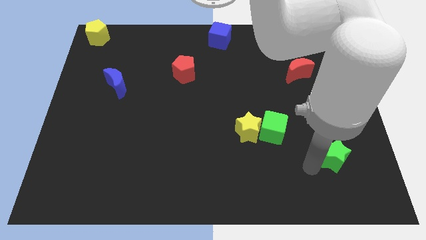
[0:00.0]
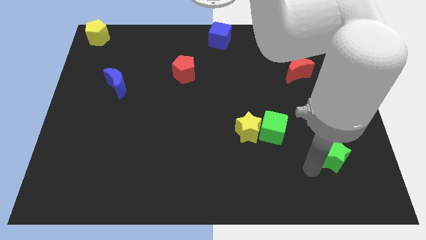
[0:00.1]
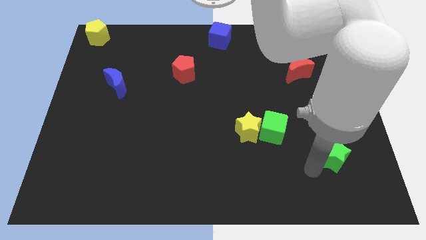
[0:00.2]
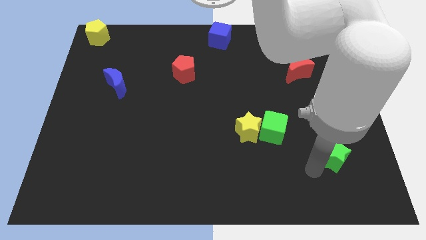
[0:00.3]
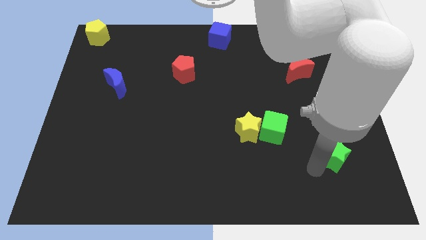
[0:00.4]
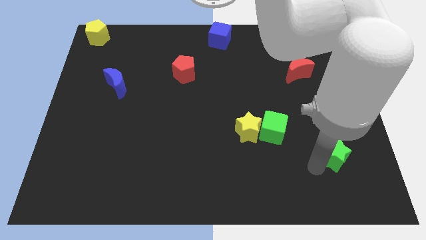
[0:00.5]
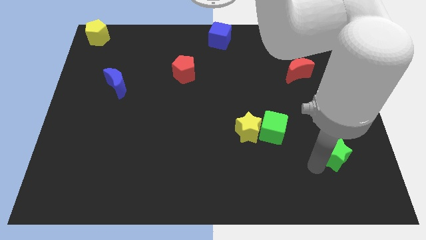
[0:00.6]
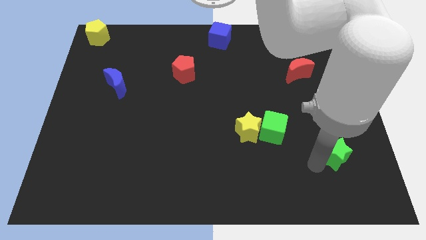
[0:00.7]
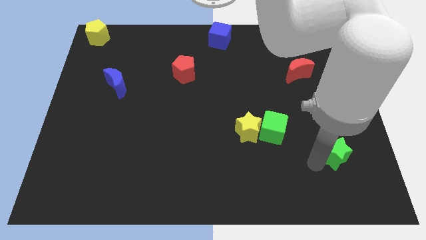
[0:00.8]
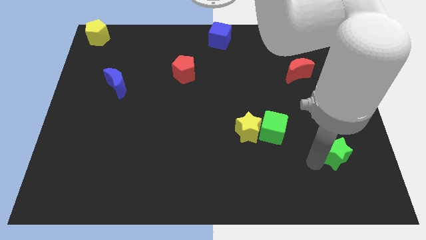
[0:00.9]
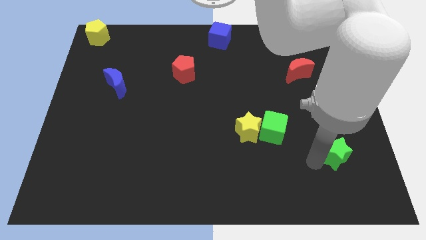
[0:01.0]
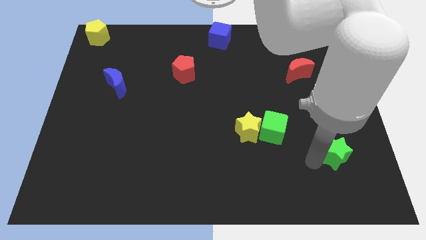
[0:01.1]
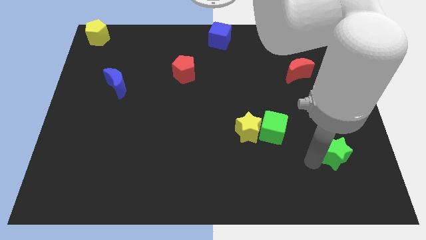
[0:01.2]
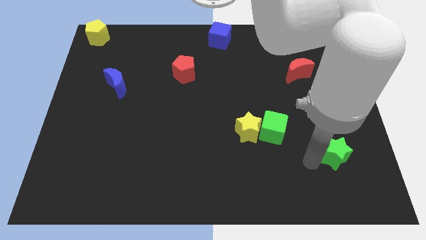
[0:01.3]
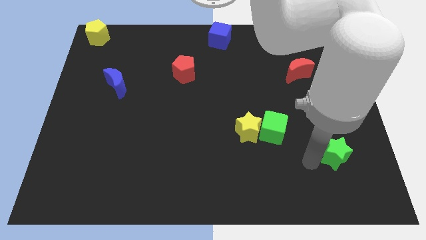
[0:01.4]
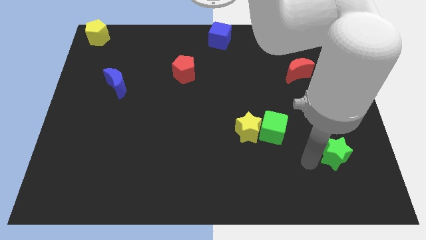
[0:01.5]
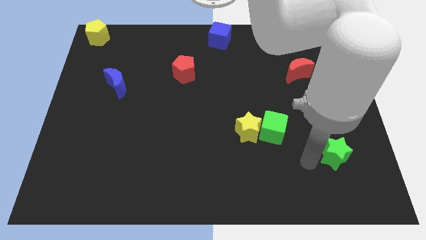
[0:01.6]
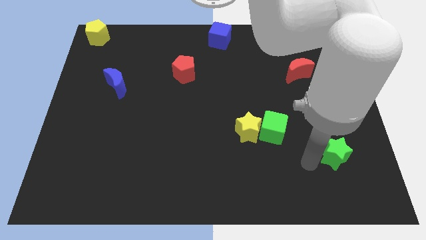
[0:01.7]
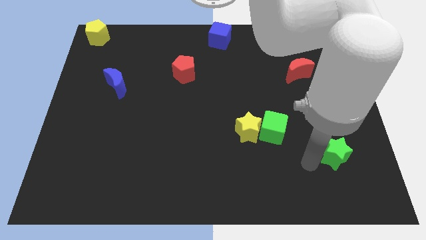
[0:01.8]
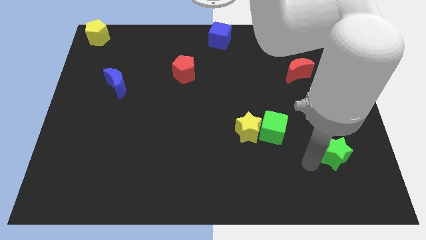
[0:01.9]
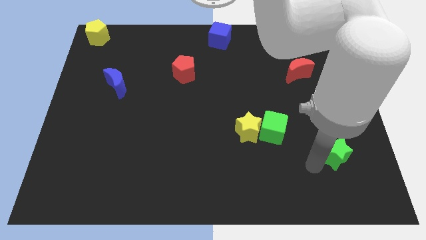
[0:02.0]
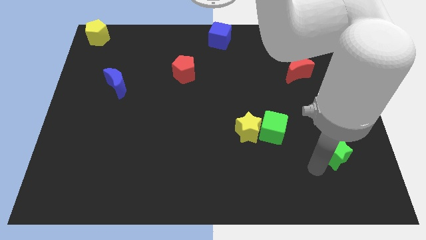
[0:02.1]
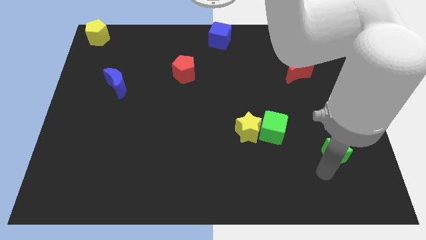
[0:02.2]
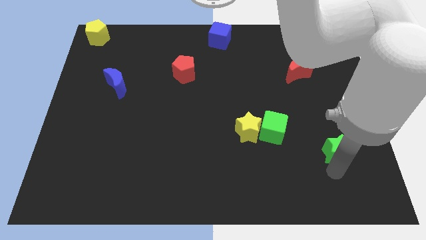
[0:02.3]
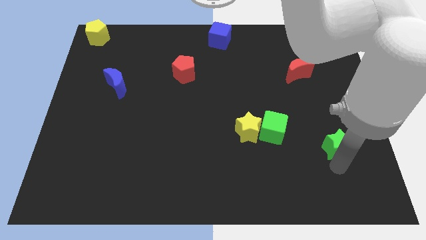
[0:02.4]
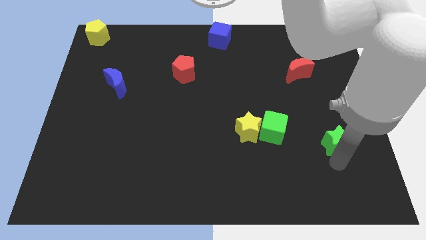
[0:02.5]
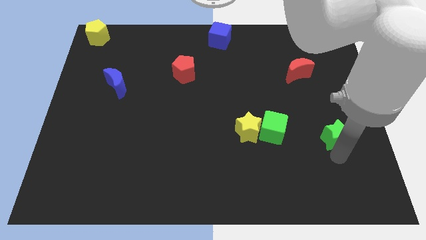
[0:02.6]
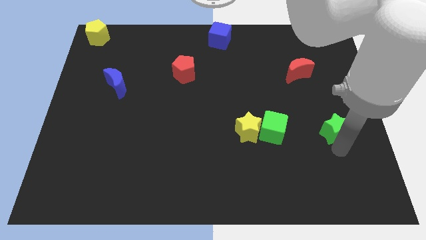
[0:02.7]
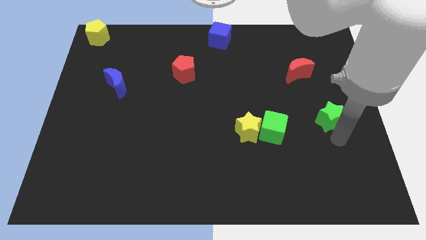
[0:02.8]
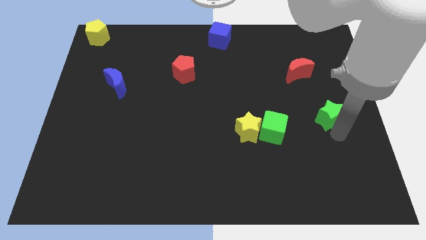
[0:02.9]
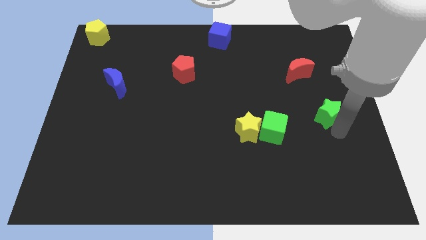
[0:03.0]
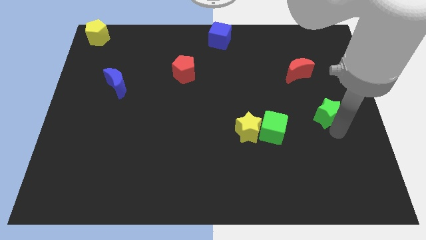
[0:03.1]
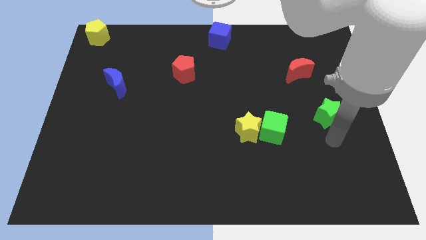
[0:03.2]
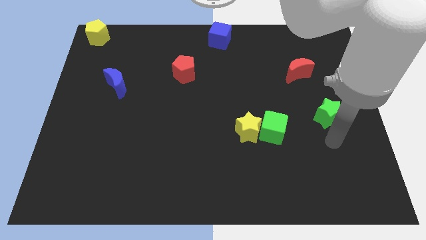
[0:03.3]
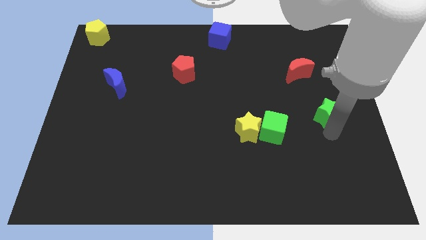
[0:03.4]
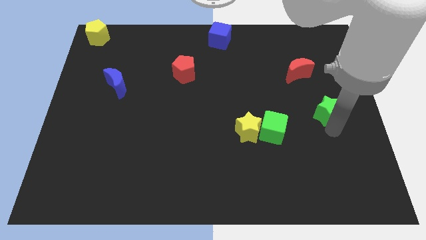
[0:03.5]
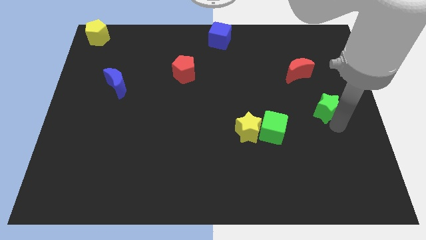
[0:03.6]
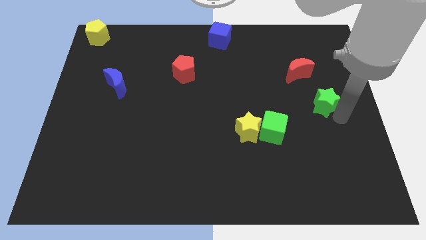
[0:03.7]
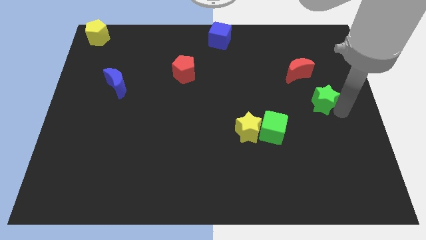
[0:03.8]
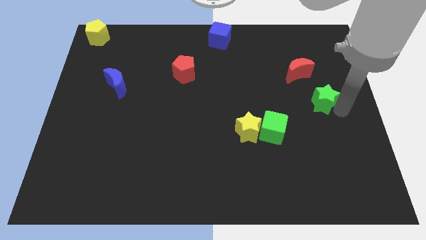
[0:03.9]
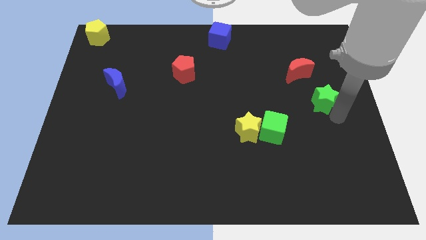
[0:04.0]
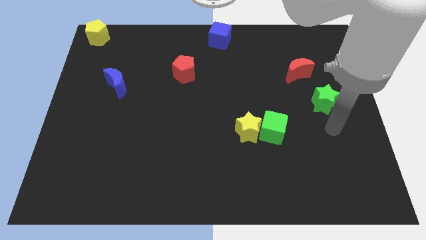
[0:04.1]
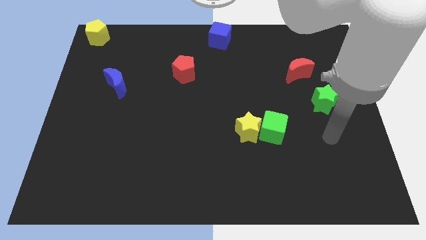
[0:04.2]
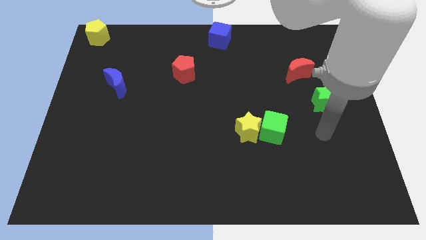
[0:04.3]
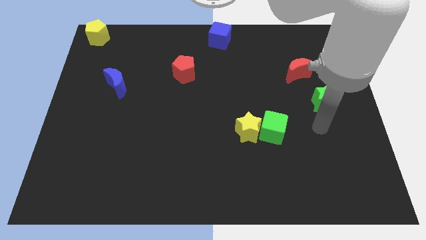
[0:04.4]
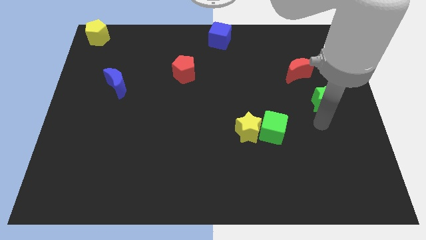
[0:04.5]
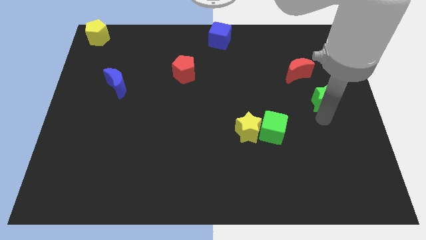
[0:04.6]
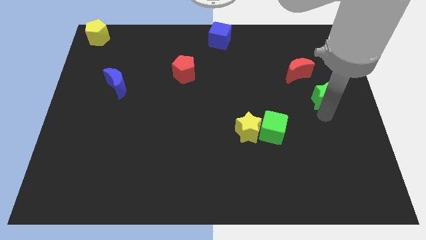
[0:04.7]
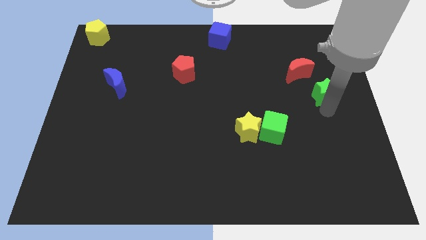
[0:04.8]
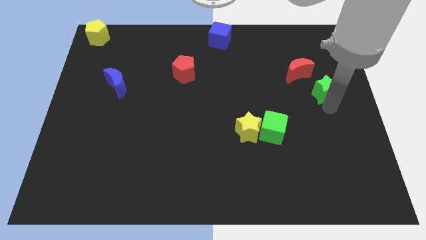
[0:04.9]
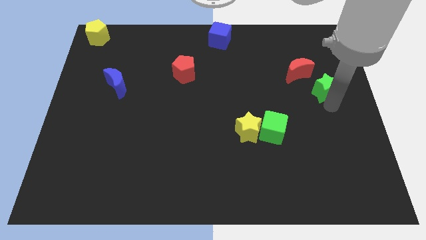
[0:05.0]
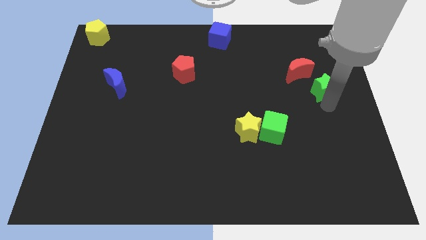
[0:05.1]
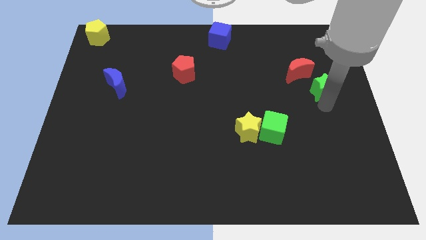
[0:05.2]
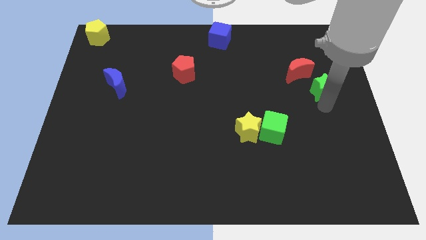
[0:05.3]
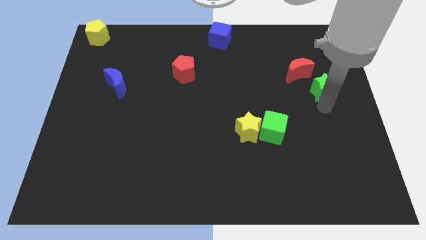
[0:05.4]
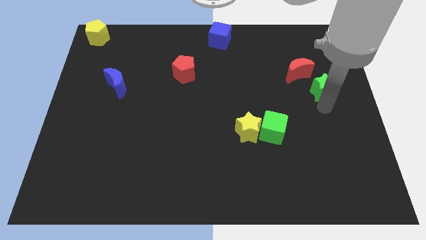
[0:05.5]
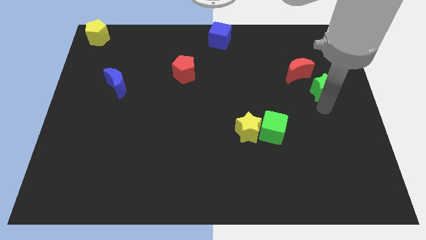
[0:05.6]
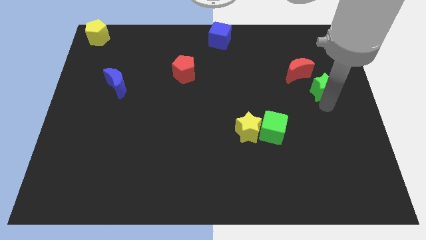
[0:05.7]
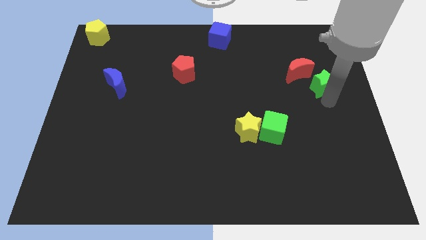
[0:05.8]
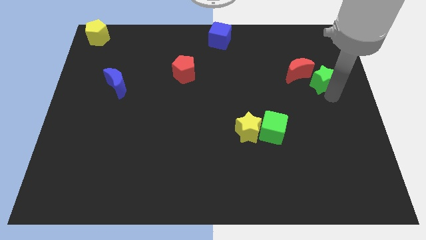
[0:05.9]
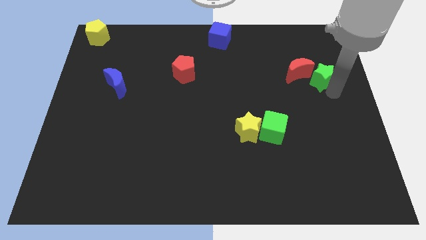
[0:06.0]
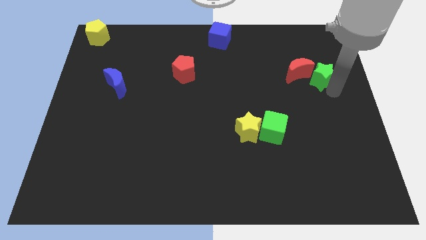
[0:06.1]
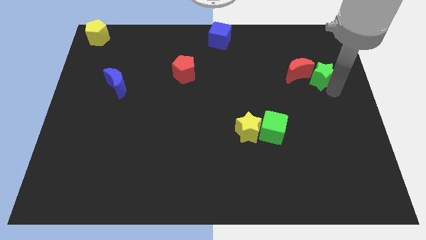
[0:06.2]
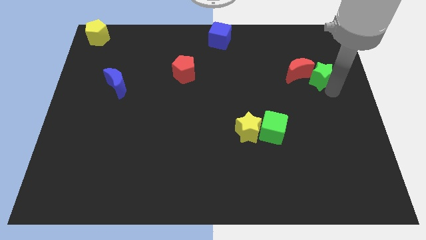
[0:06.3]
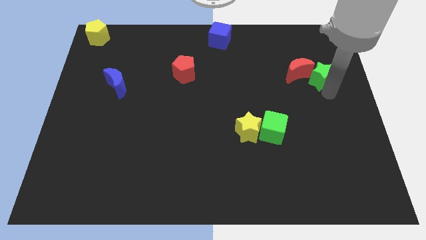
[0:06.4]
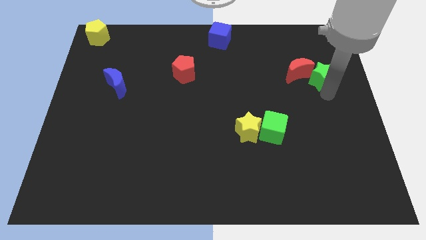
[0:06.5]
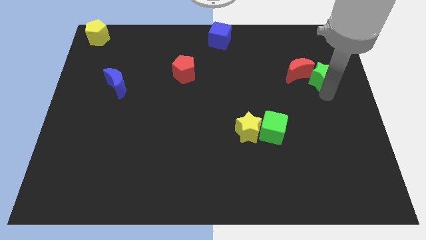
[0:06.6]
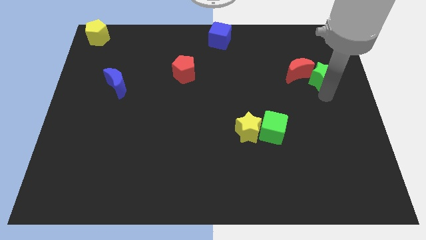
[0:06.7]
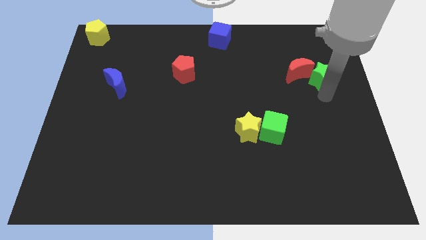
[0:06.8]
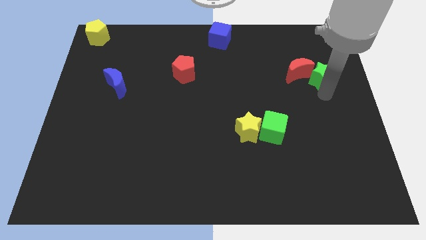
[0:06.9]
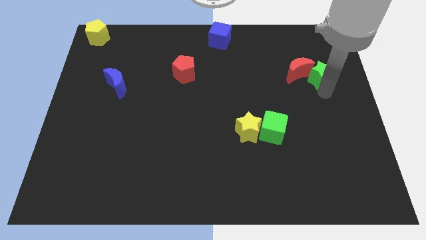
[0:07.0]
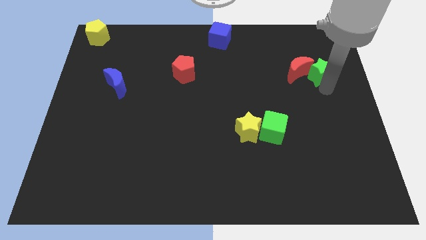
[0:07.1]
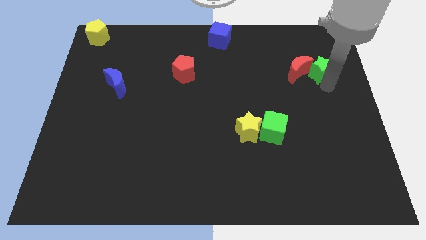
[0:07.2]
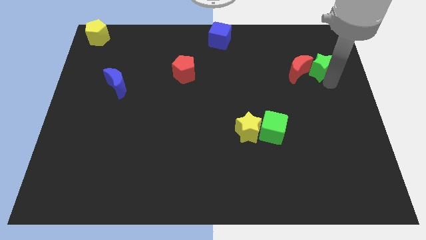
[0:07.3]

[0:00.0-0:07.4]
place green star to the right of red crescent

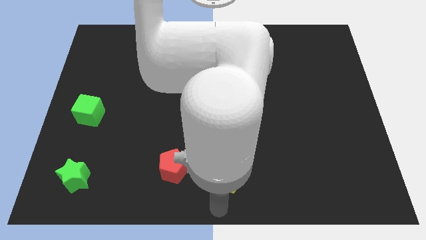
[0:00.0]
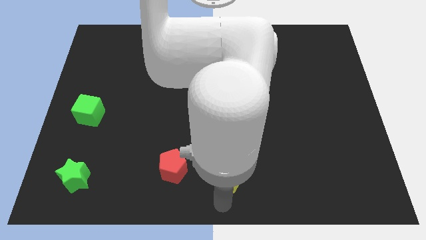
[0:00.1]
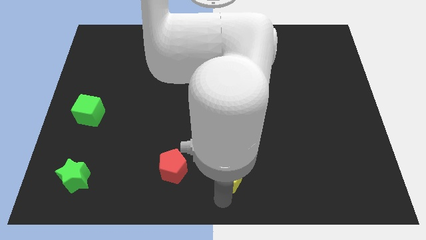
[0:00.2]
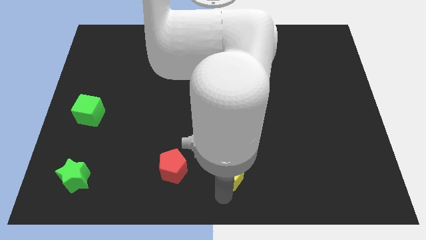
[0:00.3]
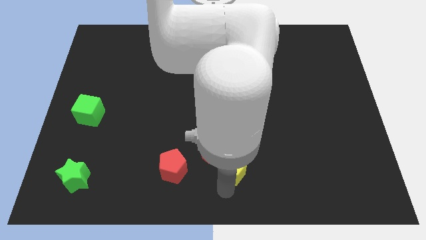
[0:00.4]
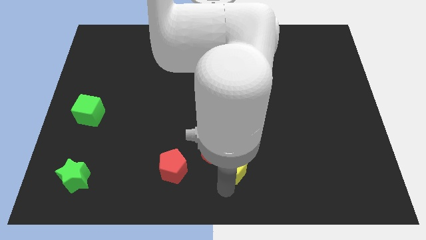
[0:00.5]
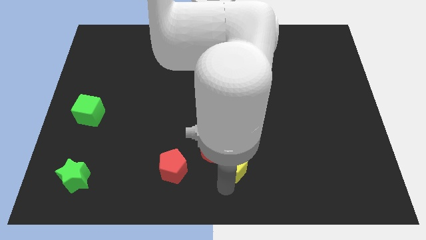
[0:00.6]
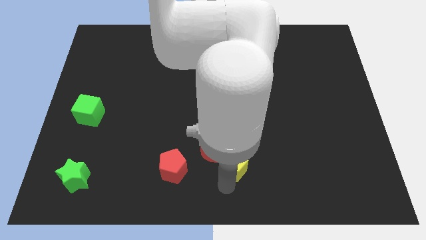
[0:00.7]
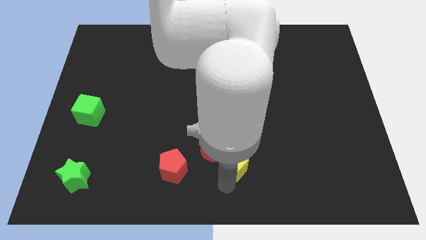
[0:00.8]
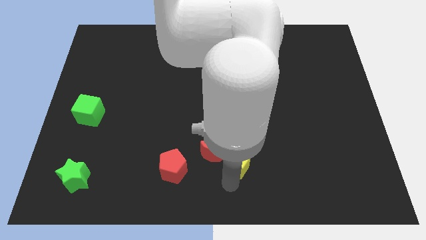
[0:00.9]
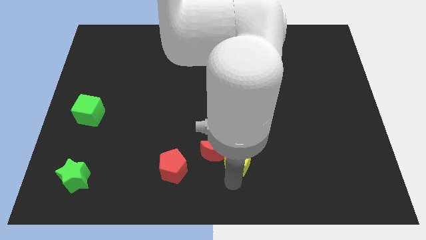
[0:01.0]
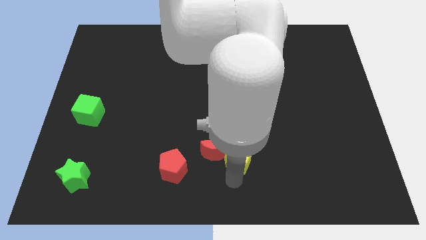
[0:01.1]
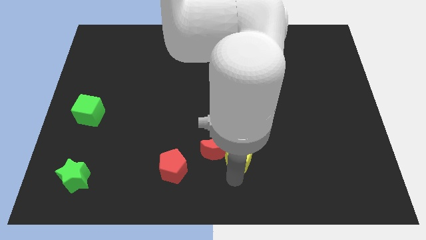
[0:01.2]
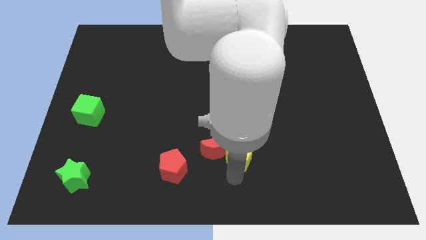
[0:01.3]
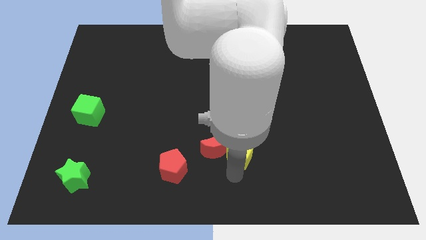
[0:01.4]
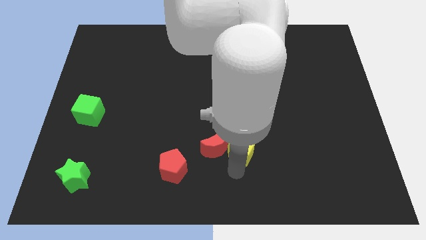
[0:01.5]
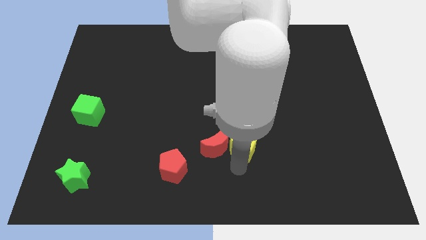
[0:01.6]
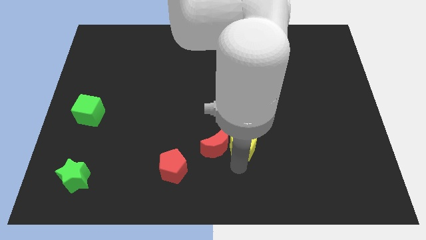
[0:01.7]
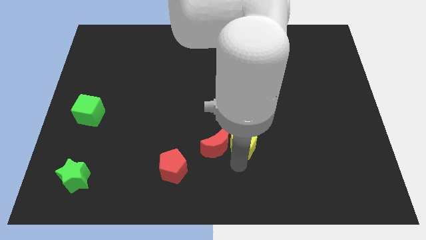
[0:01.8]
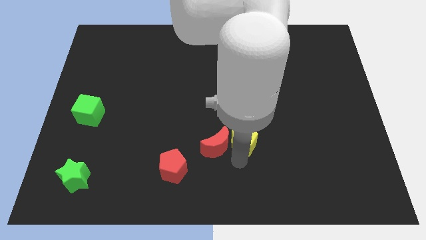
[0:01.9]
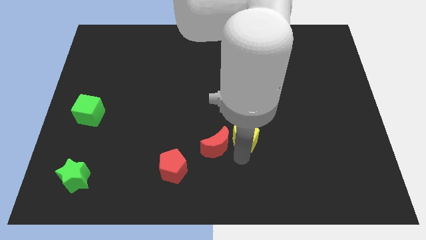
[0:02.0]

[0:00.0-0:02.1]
slightly push the yellow pentagon top right
